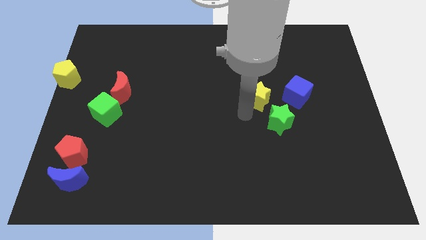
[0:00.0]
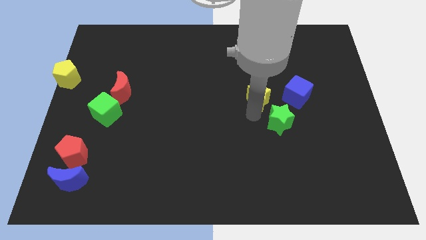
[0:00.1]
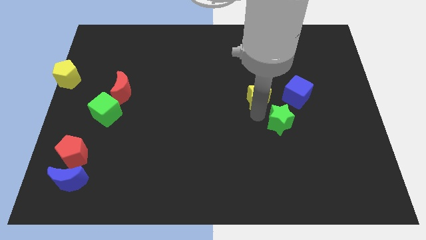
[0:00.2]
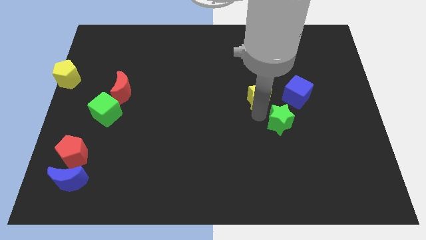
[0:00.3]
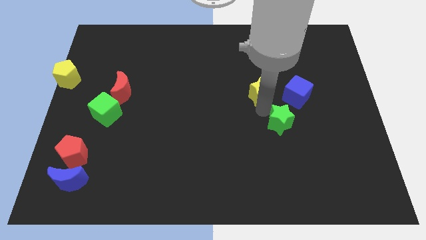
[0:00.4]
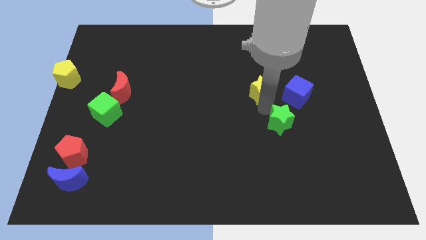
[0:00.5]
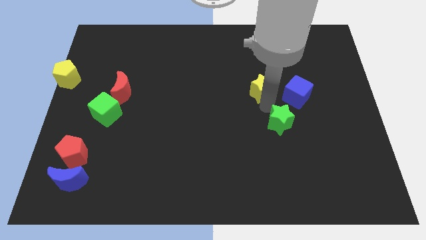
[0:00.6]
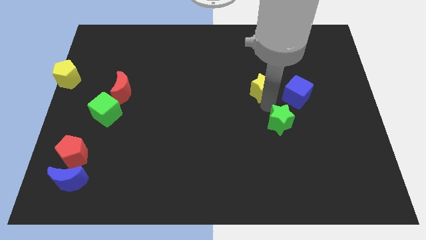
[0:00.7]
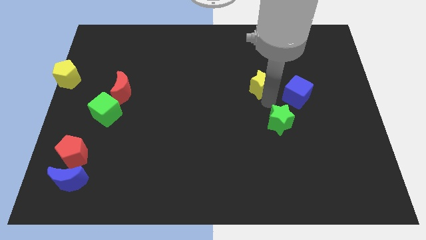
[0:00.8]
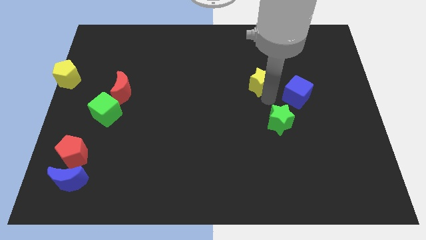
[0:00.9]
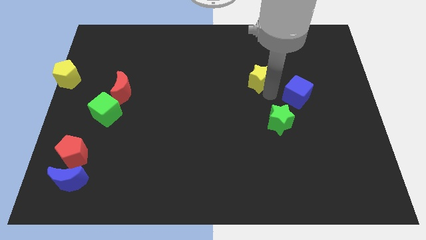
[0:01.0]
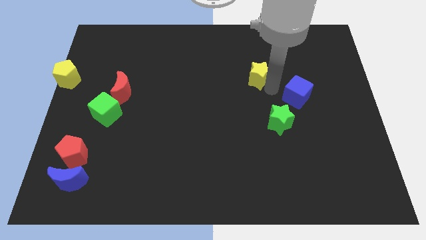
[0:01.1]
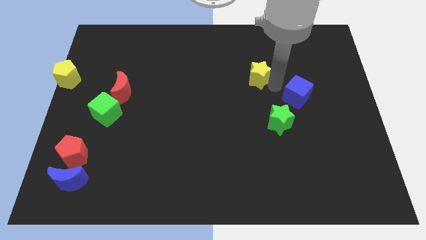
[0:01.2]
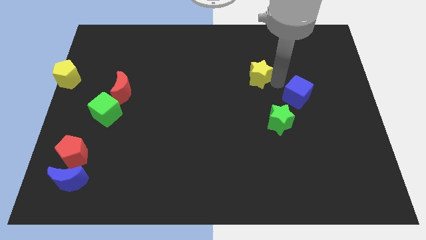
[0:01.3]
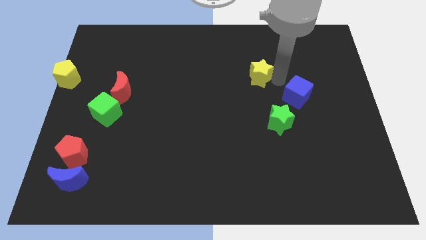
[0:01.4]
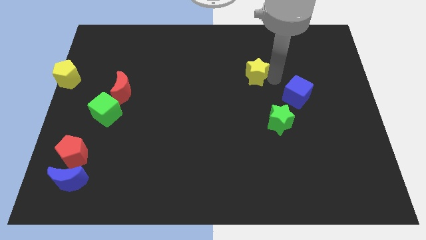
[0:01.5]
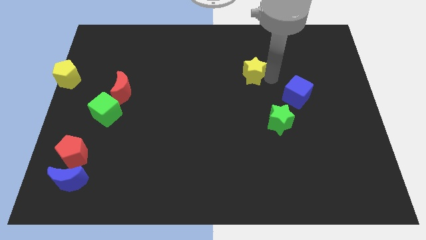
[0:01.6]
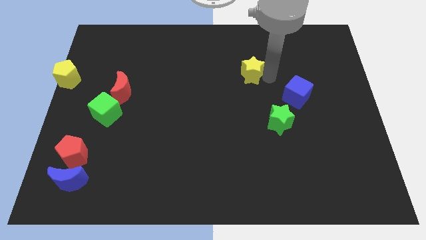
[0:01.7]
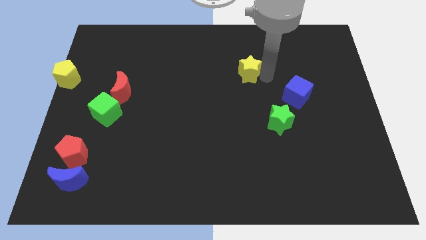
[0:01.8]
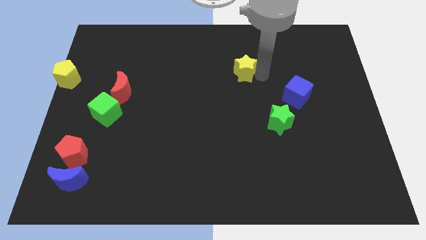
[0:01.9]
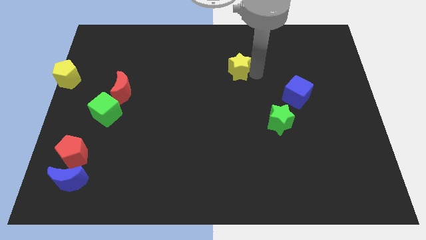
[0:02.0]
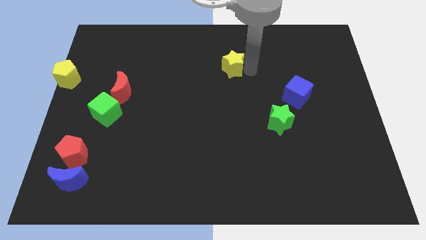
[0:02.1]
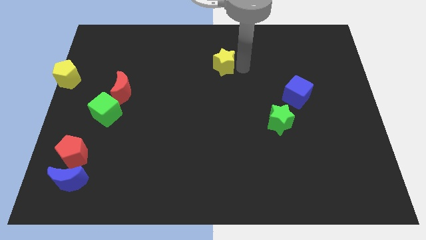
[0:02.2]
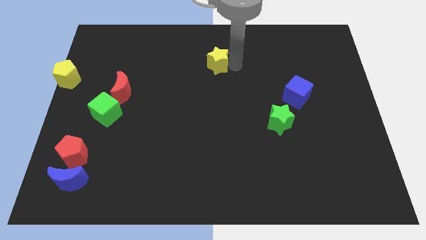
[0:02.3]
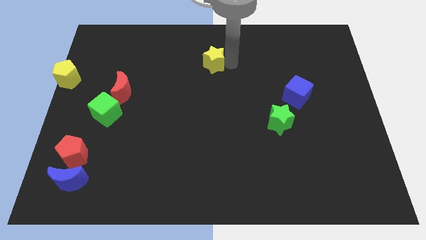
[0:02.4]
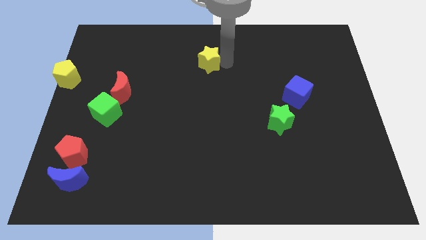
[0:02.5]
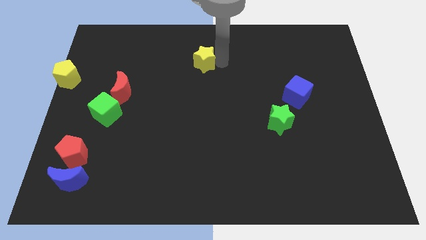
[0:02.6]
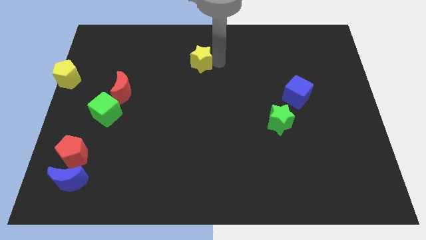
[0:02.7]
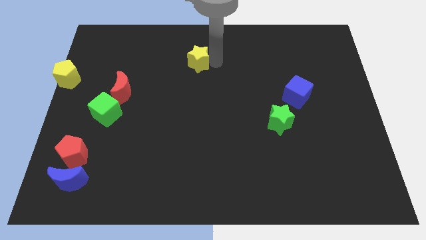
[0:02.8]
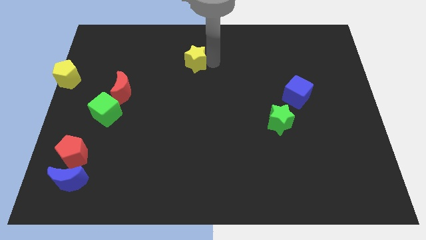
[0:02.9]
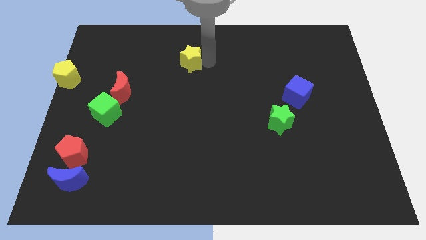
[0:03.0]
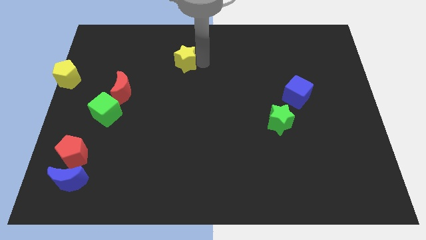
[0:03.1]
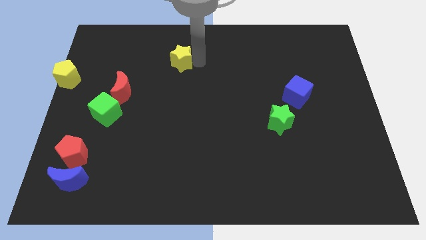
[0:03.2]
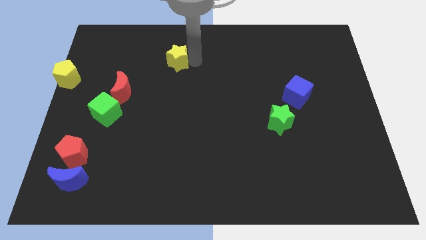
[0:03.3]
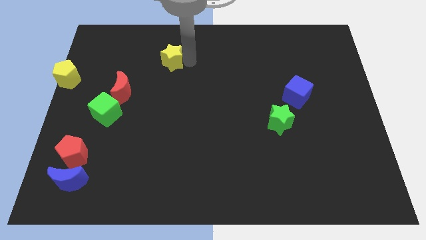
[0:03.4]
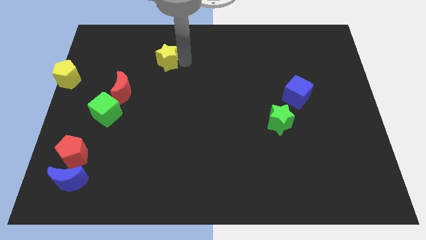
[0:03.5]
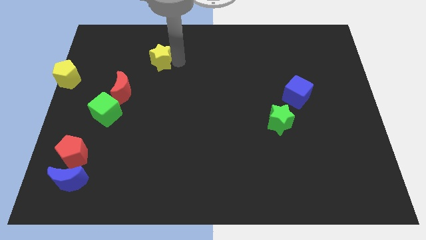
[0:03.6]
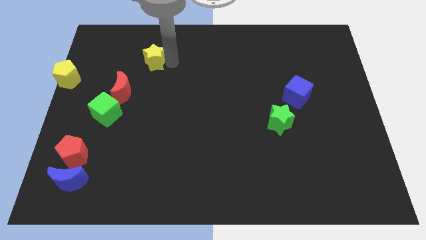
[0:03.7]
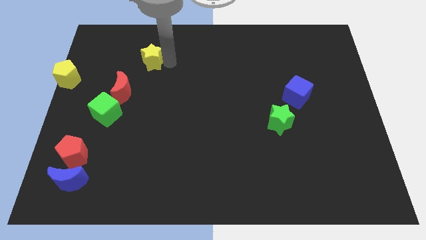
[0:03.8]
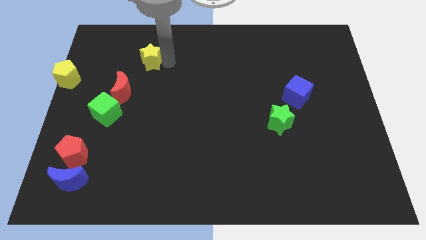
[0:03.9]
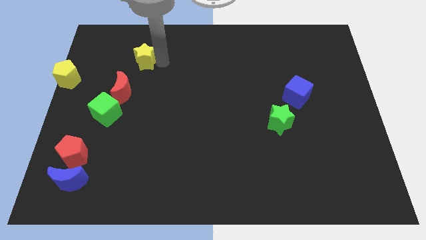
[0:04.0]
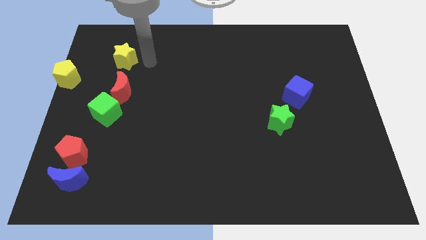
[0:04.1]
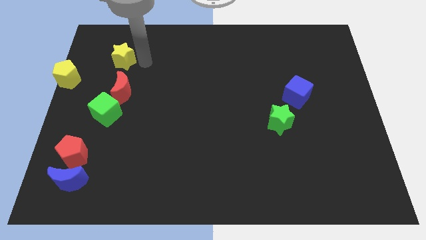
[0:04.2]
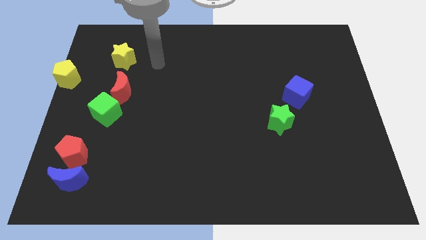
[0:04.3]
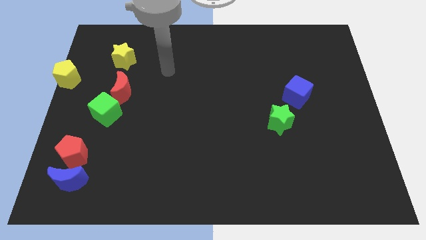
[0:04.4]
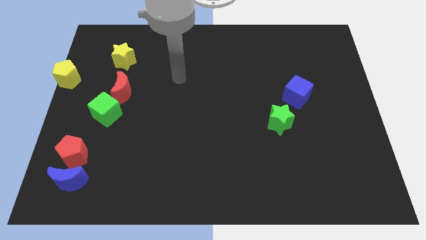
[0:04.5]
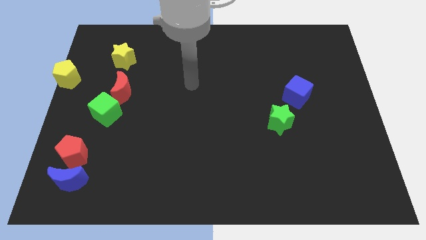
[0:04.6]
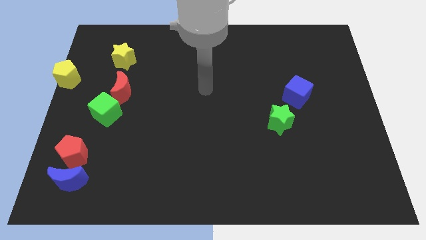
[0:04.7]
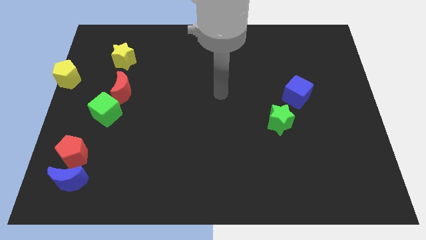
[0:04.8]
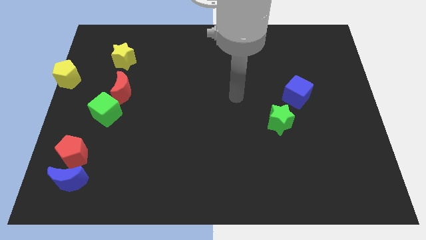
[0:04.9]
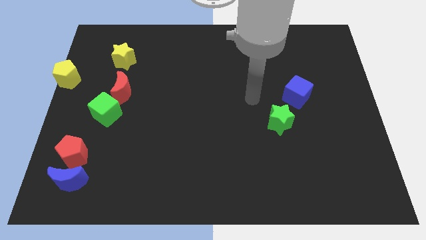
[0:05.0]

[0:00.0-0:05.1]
move the yellow star above the red pentagon

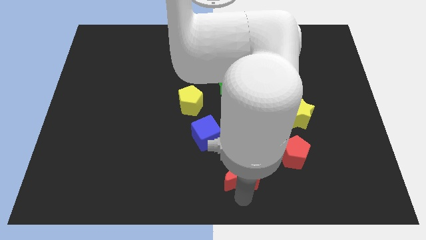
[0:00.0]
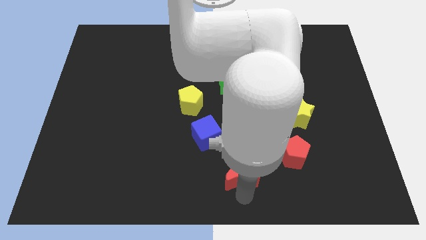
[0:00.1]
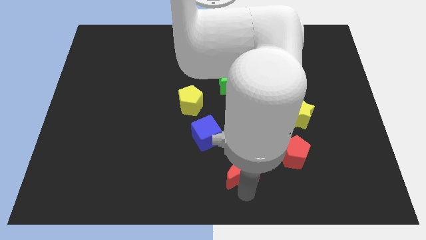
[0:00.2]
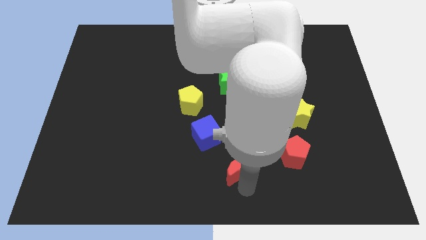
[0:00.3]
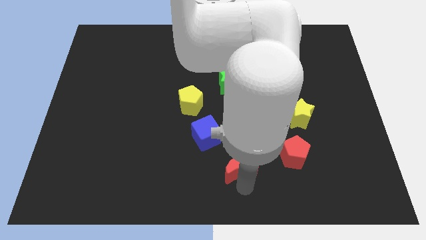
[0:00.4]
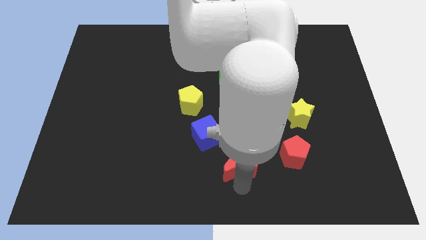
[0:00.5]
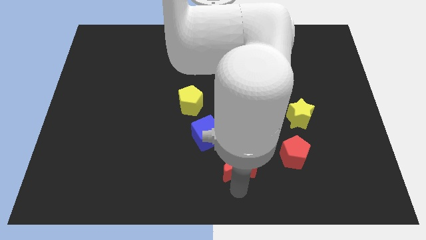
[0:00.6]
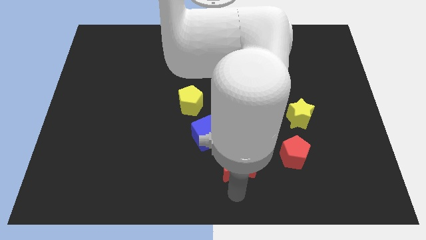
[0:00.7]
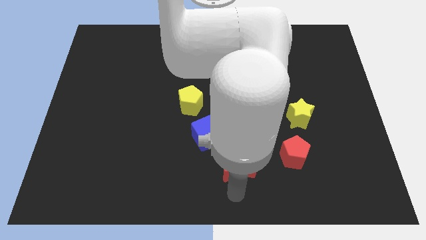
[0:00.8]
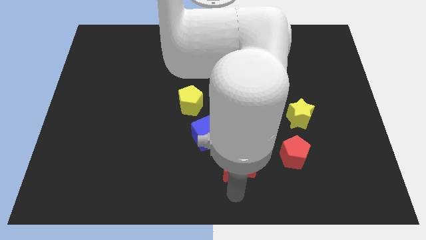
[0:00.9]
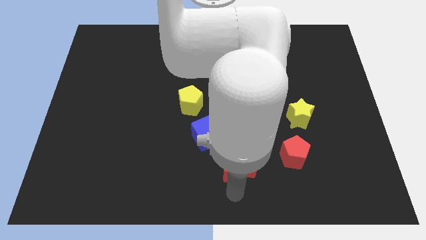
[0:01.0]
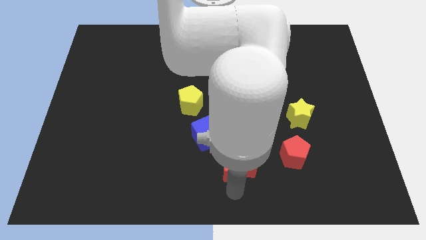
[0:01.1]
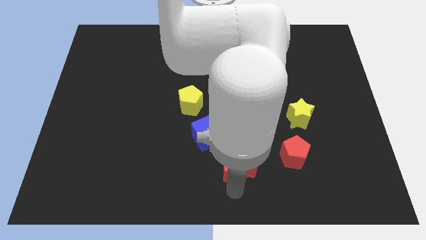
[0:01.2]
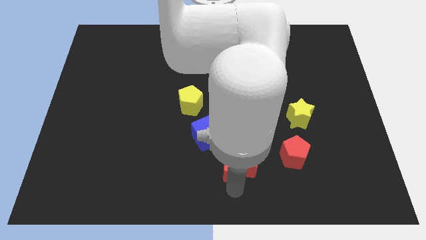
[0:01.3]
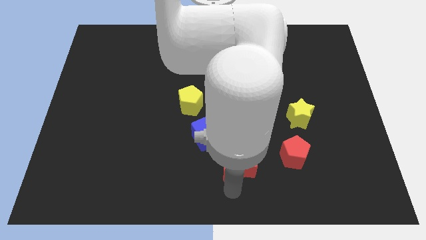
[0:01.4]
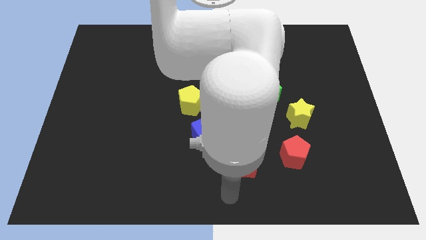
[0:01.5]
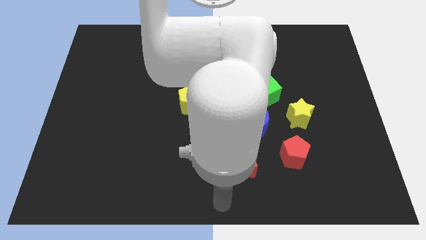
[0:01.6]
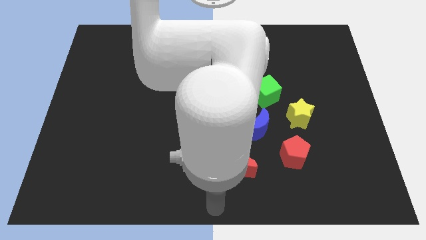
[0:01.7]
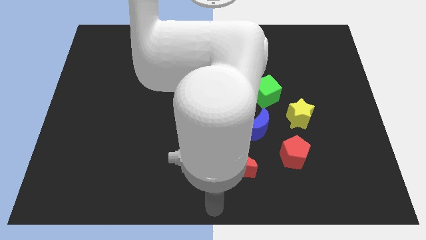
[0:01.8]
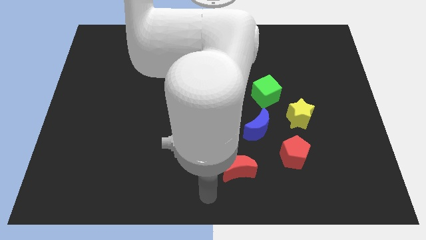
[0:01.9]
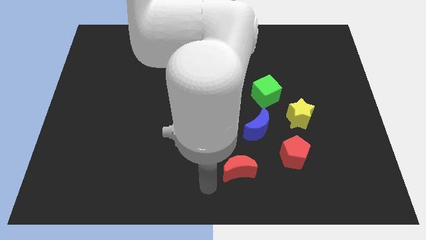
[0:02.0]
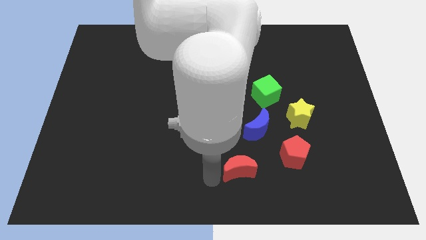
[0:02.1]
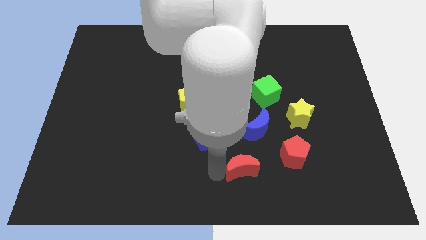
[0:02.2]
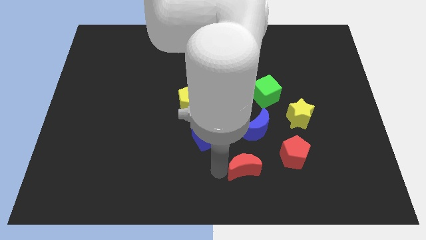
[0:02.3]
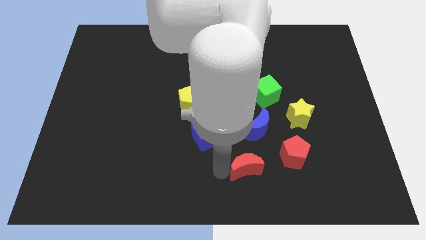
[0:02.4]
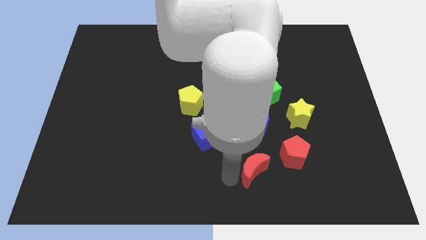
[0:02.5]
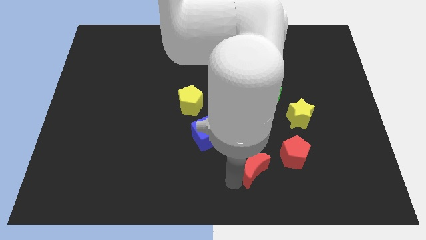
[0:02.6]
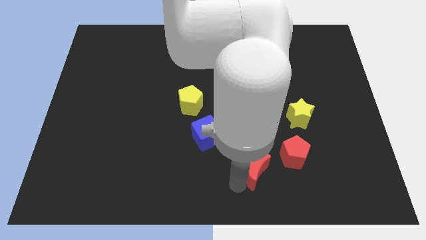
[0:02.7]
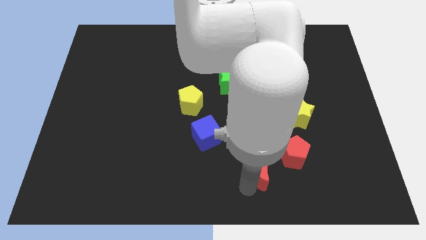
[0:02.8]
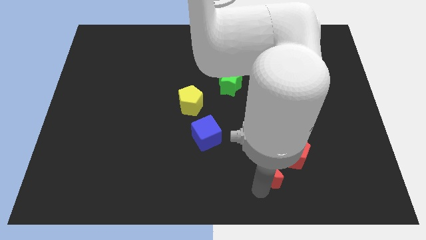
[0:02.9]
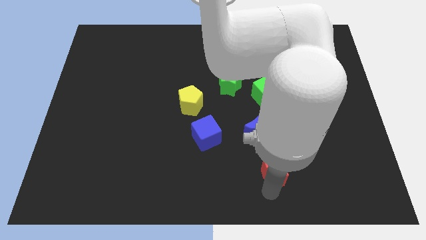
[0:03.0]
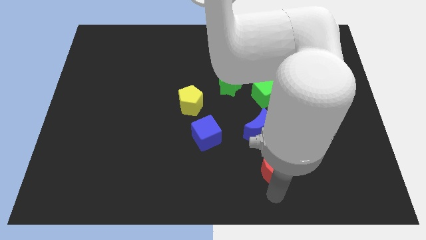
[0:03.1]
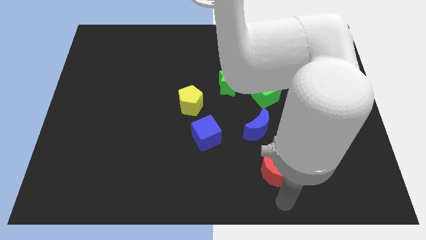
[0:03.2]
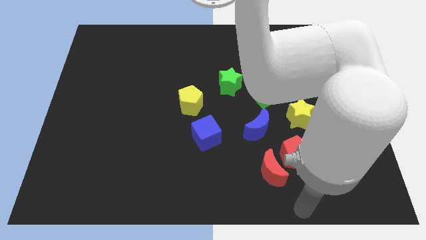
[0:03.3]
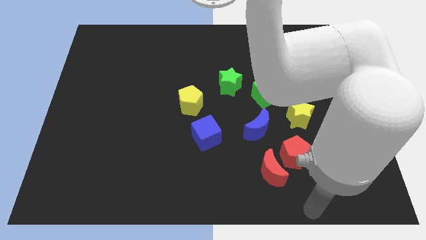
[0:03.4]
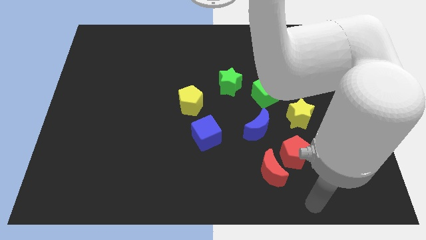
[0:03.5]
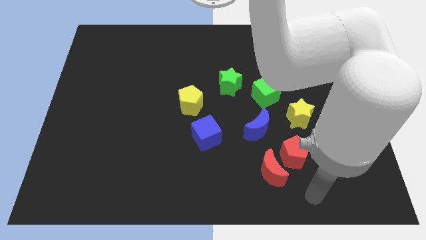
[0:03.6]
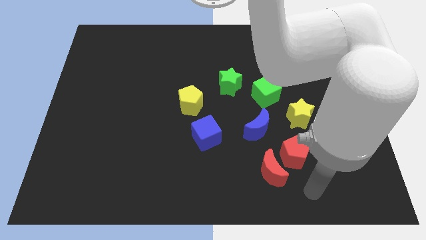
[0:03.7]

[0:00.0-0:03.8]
move the red crescent close to the red pentagon
